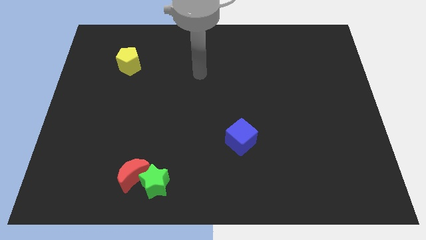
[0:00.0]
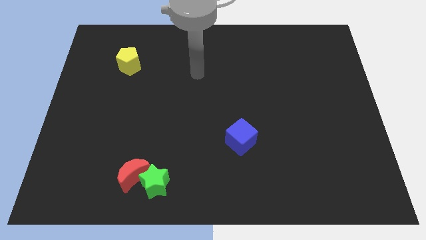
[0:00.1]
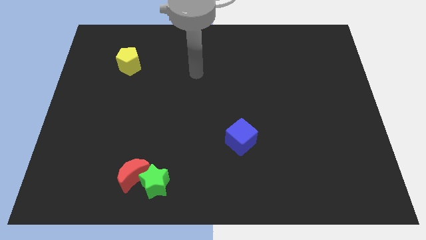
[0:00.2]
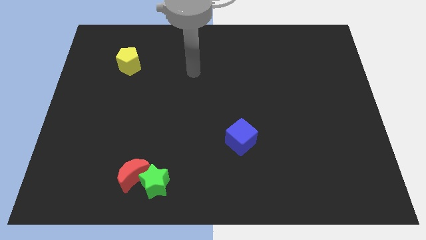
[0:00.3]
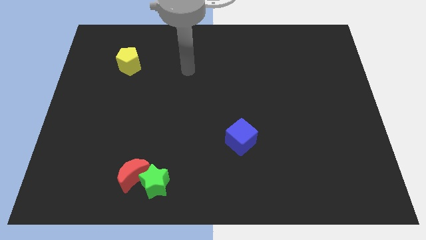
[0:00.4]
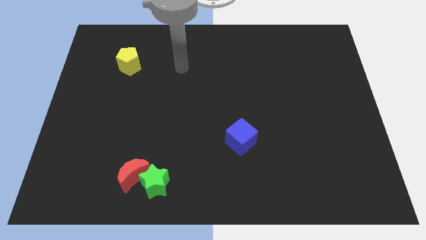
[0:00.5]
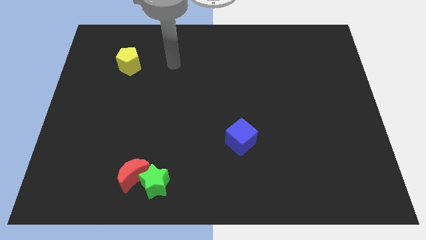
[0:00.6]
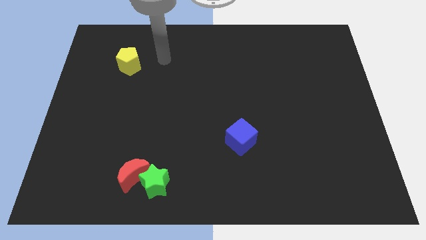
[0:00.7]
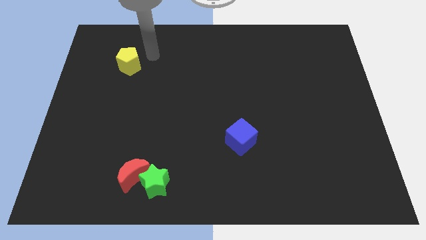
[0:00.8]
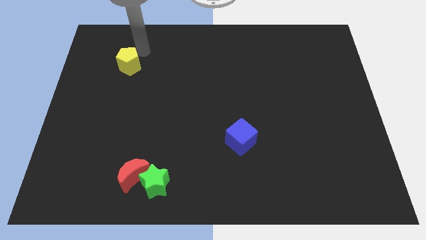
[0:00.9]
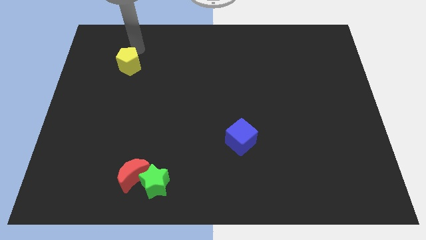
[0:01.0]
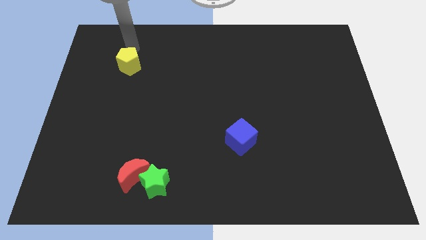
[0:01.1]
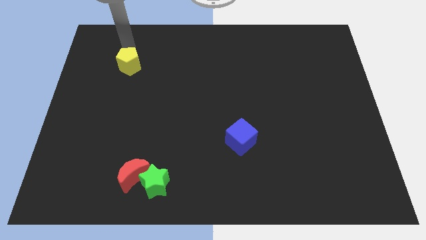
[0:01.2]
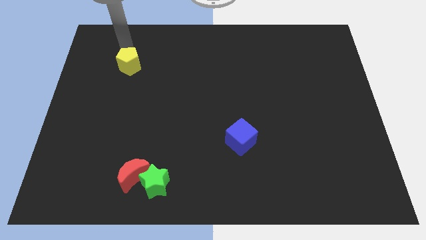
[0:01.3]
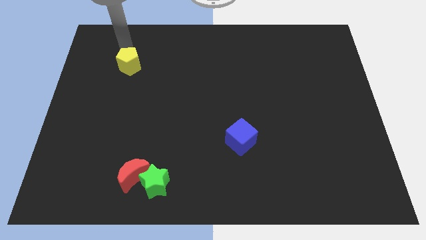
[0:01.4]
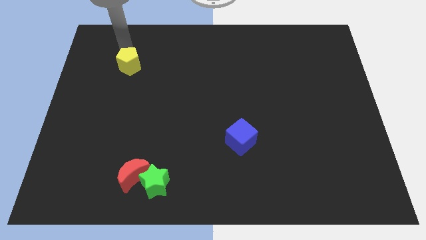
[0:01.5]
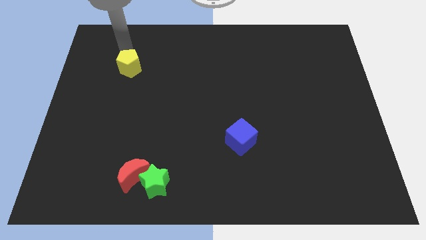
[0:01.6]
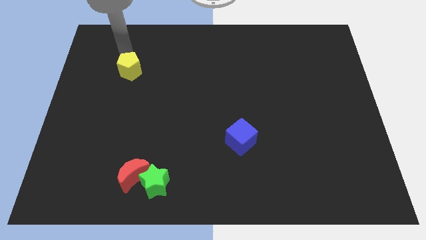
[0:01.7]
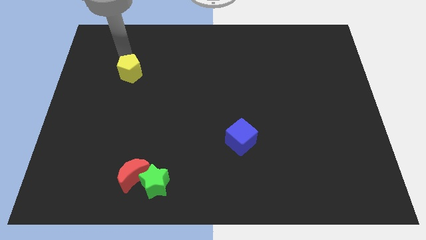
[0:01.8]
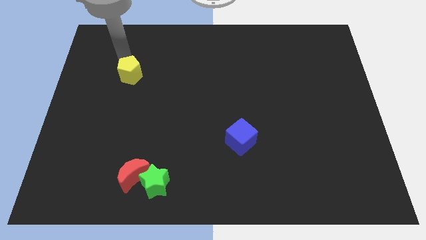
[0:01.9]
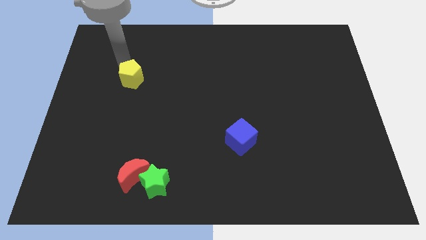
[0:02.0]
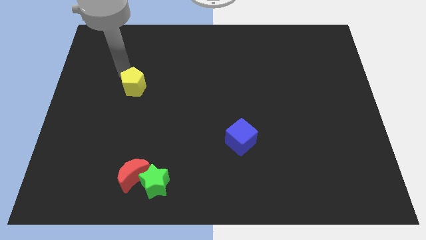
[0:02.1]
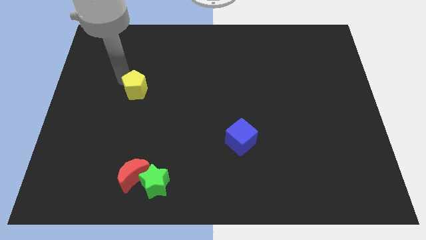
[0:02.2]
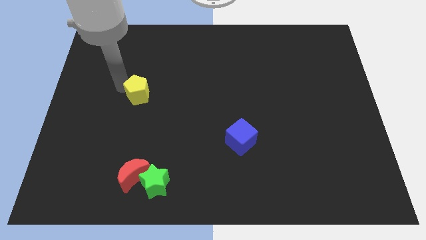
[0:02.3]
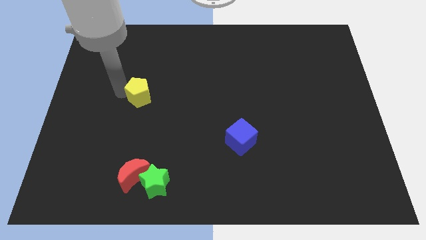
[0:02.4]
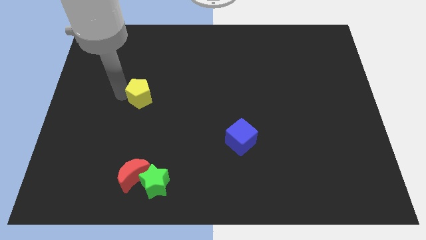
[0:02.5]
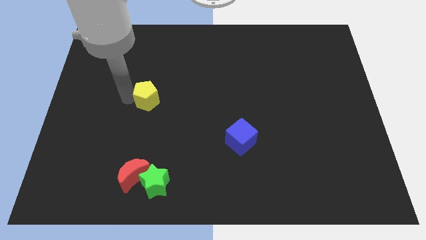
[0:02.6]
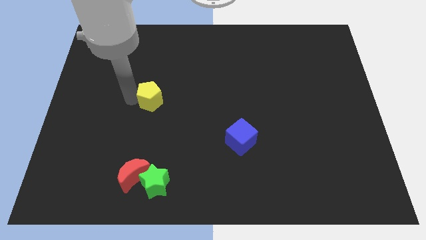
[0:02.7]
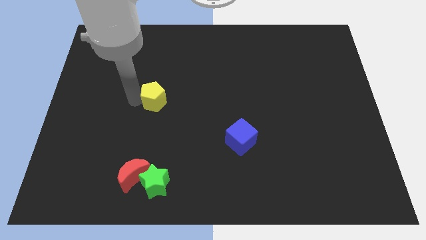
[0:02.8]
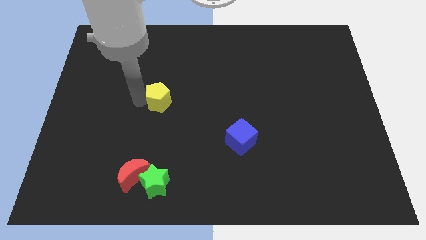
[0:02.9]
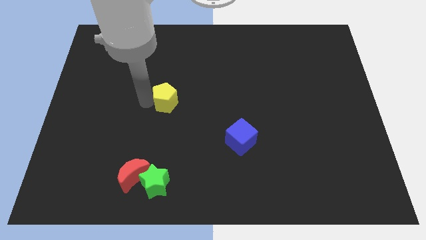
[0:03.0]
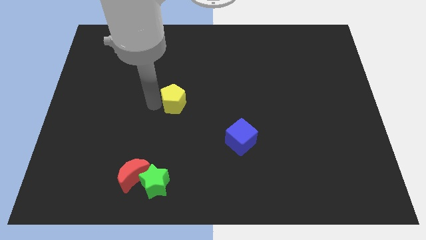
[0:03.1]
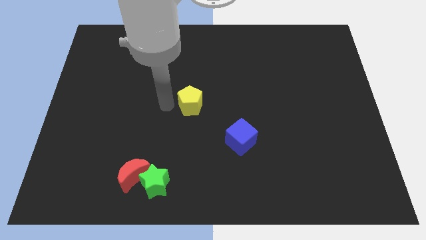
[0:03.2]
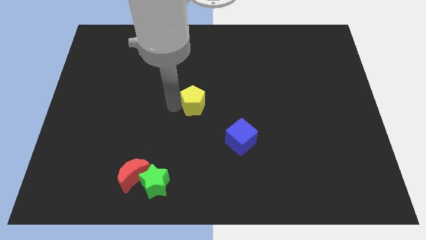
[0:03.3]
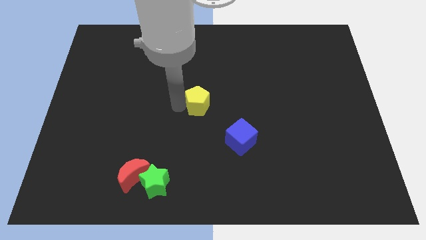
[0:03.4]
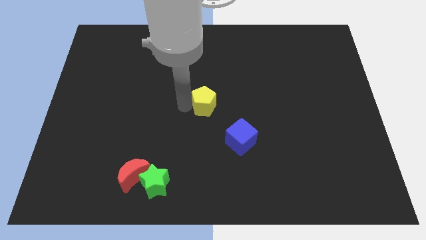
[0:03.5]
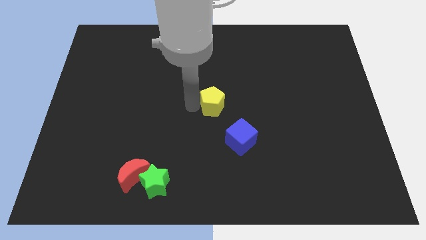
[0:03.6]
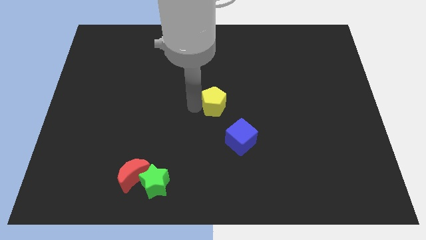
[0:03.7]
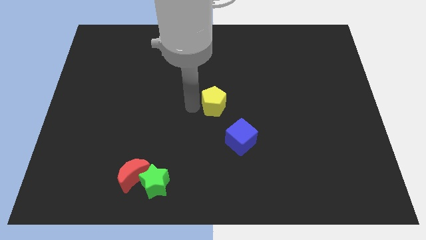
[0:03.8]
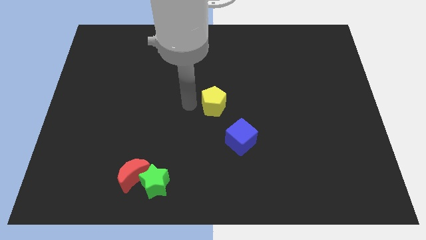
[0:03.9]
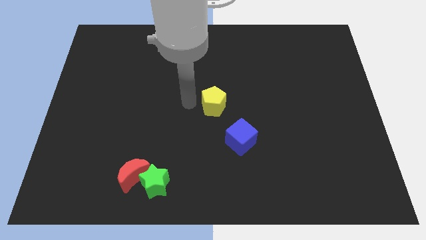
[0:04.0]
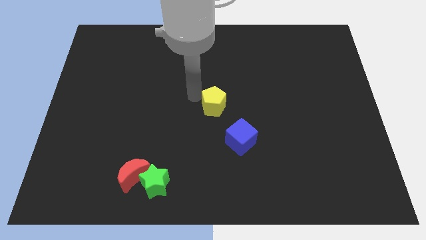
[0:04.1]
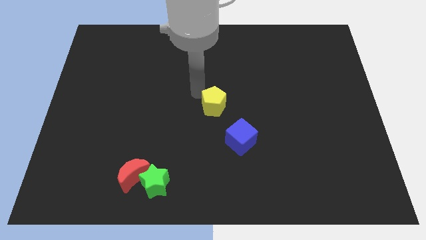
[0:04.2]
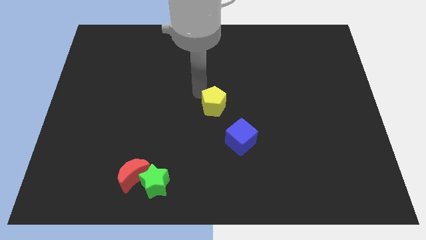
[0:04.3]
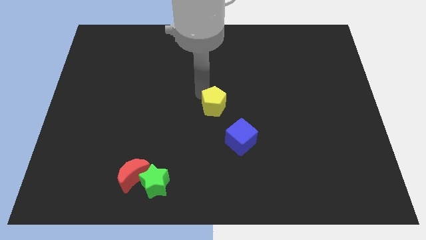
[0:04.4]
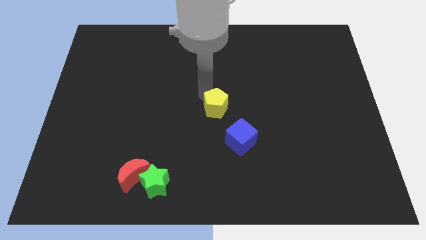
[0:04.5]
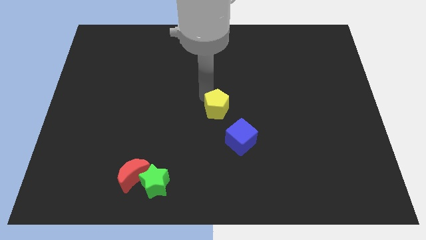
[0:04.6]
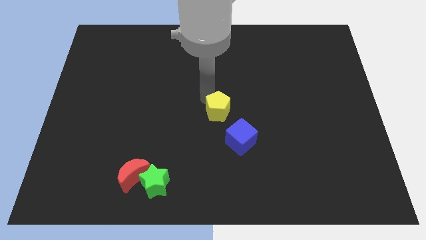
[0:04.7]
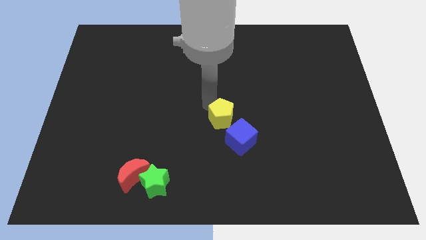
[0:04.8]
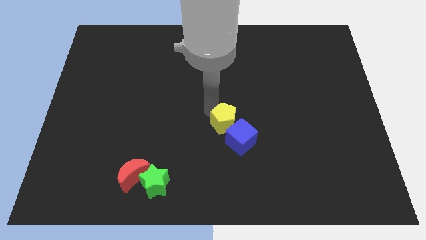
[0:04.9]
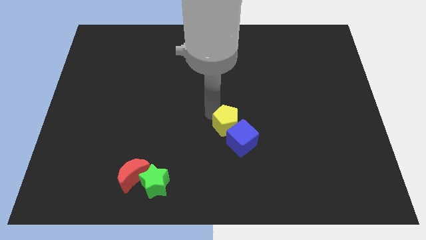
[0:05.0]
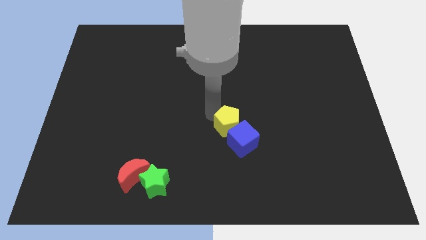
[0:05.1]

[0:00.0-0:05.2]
push the yellow block towards the cube

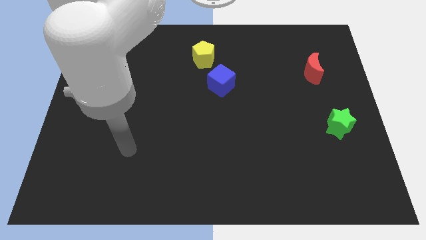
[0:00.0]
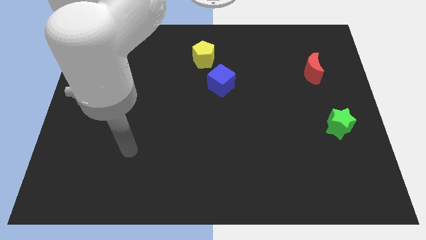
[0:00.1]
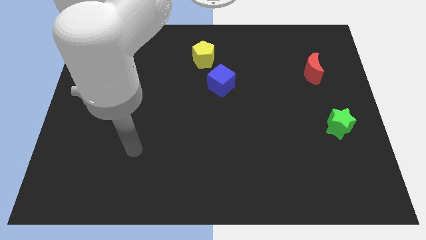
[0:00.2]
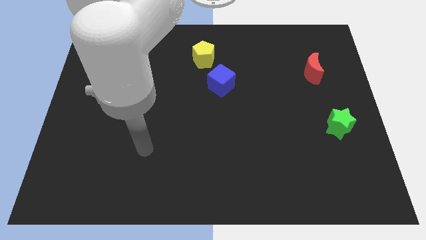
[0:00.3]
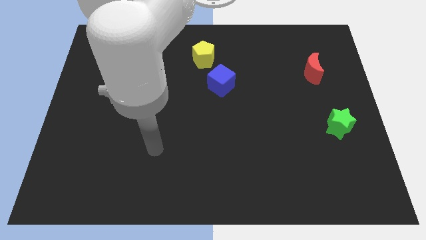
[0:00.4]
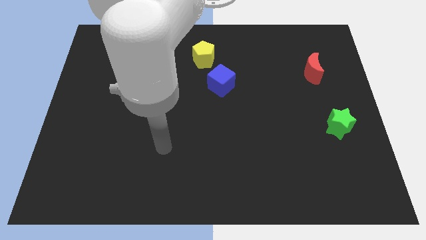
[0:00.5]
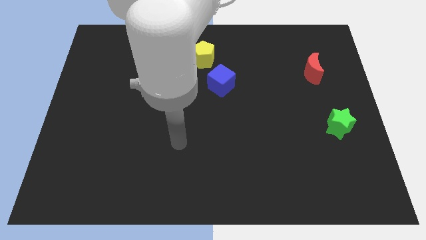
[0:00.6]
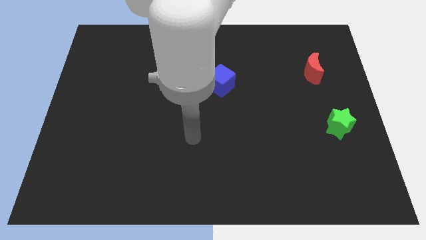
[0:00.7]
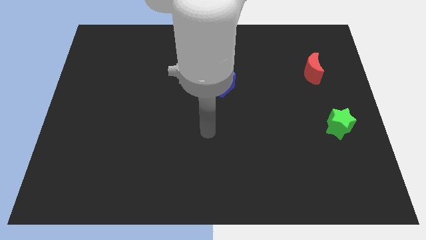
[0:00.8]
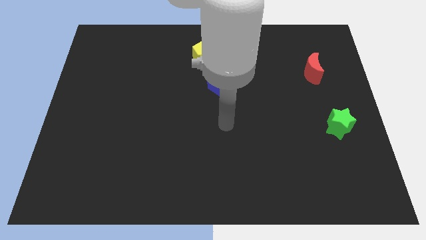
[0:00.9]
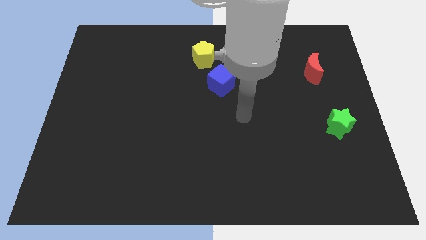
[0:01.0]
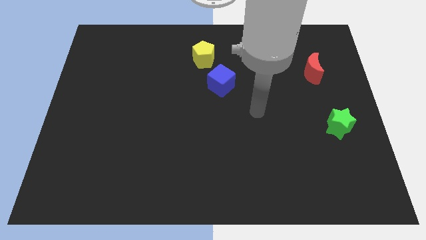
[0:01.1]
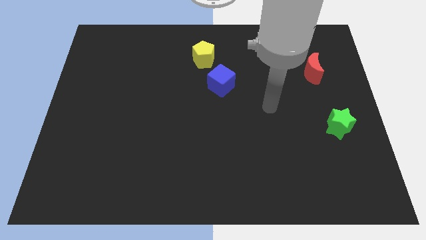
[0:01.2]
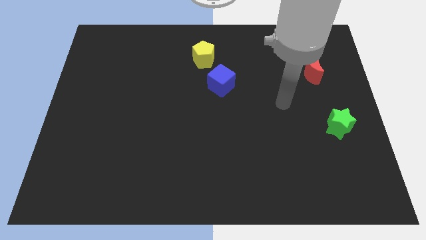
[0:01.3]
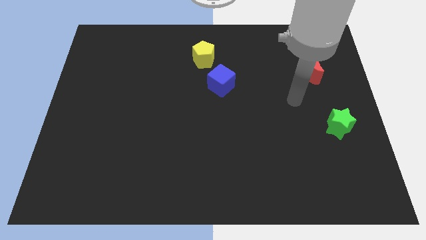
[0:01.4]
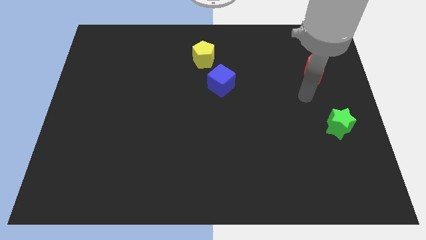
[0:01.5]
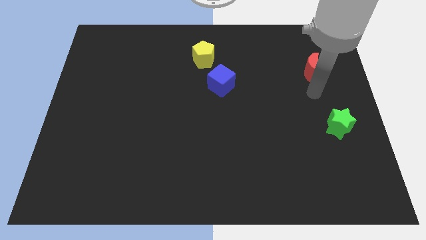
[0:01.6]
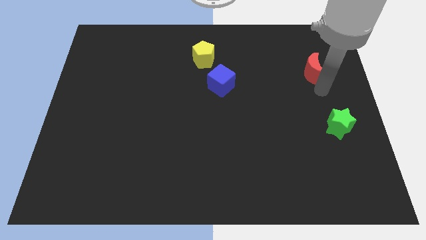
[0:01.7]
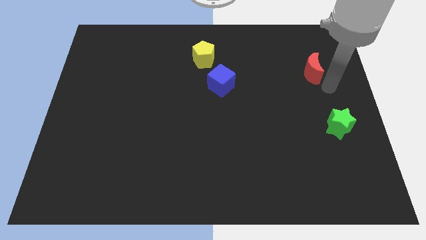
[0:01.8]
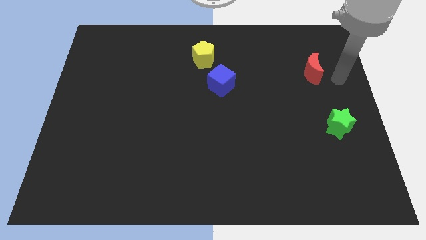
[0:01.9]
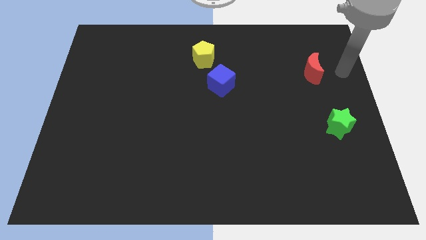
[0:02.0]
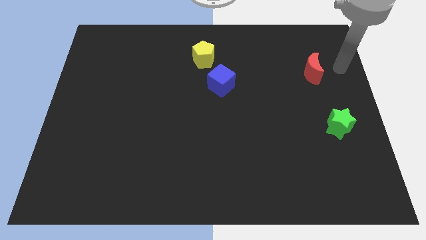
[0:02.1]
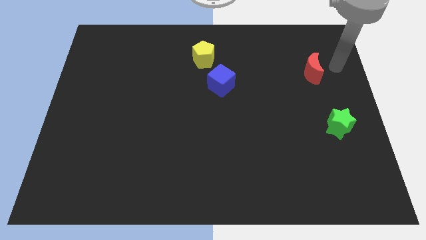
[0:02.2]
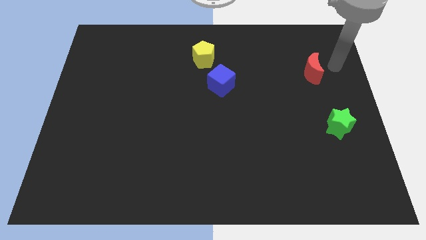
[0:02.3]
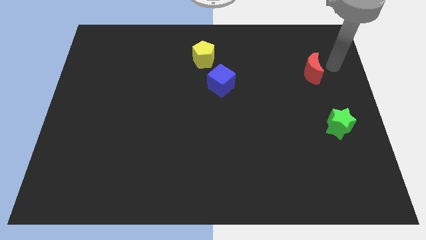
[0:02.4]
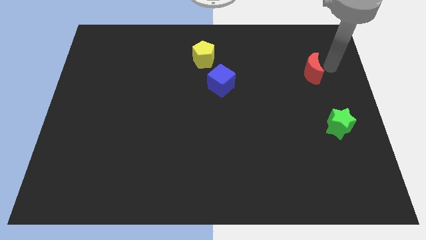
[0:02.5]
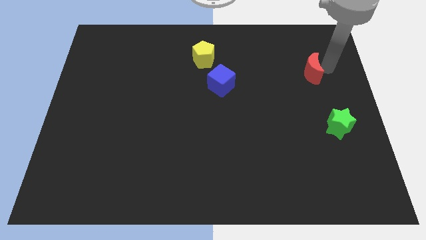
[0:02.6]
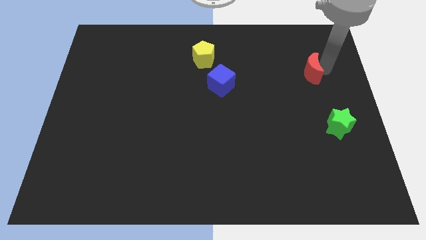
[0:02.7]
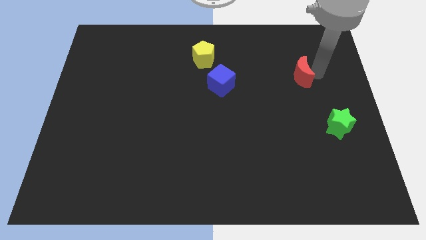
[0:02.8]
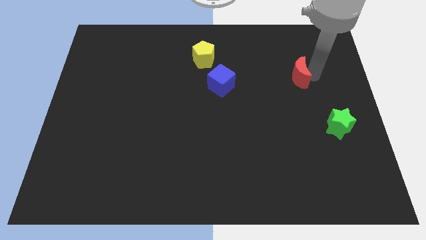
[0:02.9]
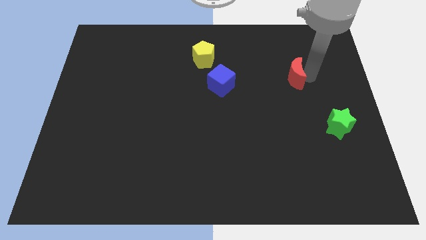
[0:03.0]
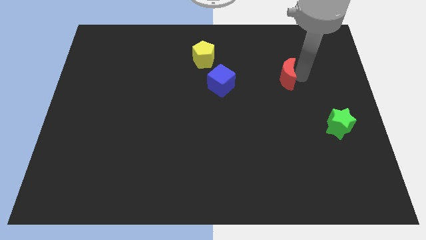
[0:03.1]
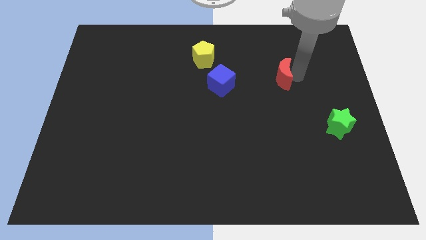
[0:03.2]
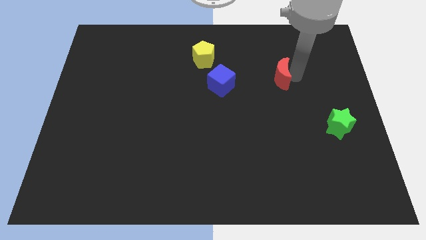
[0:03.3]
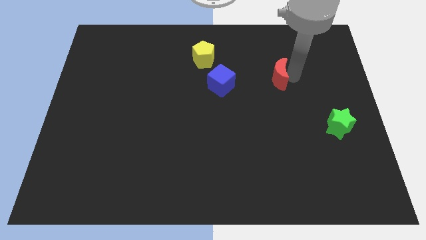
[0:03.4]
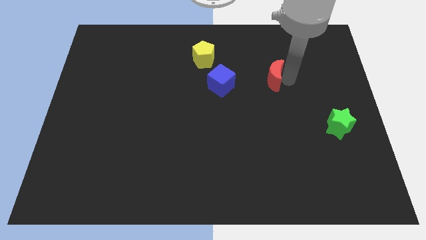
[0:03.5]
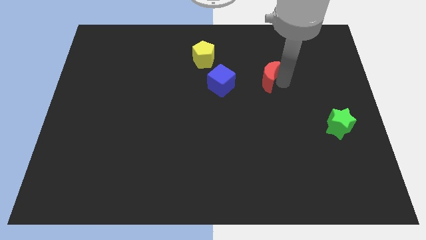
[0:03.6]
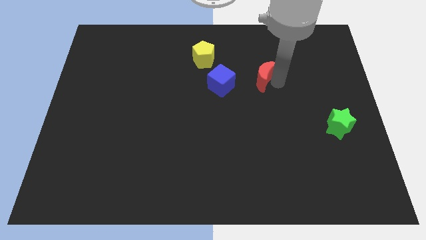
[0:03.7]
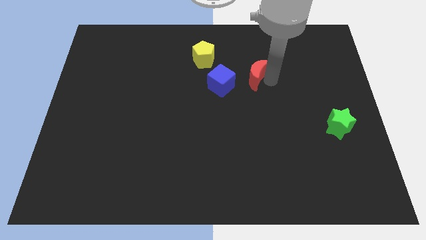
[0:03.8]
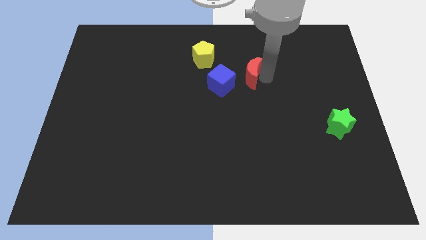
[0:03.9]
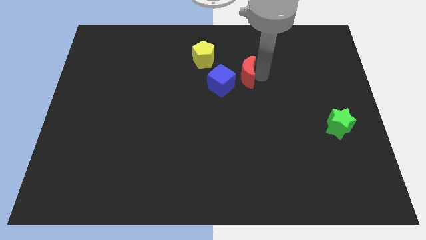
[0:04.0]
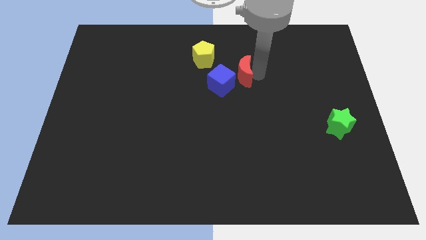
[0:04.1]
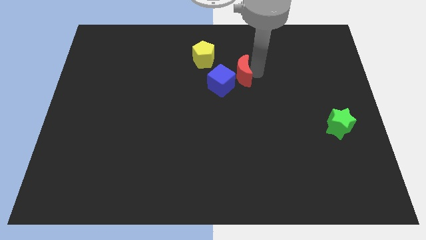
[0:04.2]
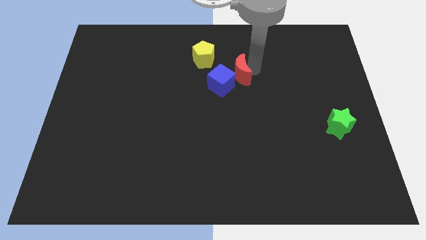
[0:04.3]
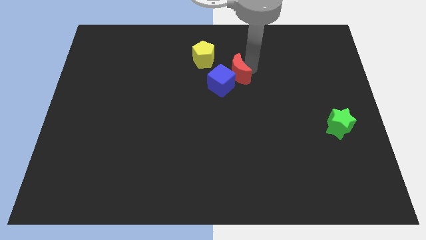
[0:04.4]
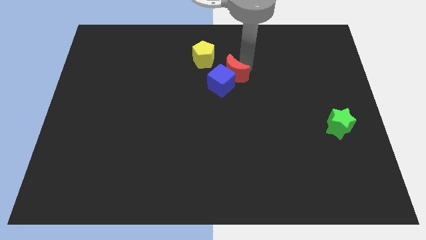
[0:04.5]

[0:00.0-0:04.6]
slide the red moon close to the blue cube
